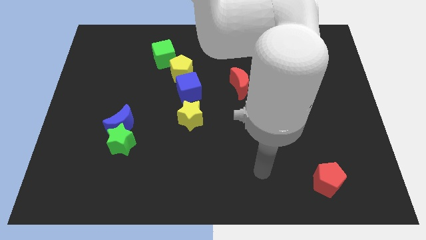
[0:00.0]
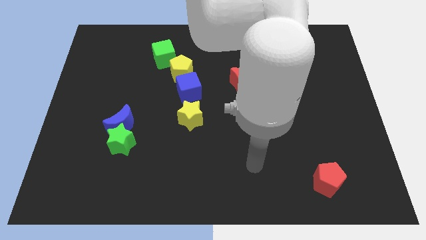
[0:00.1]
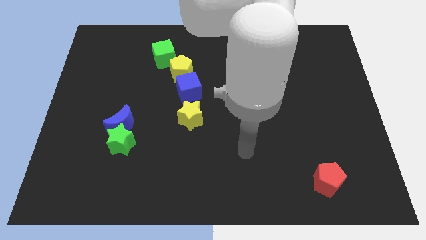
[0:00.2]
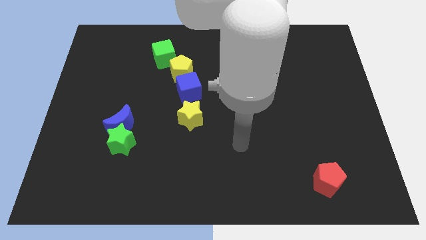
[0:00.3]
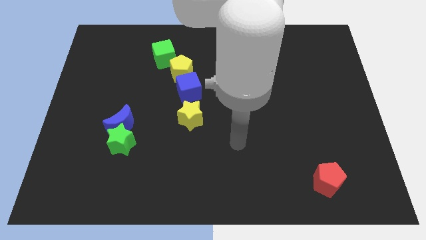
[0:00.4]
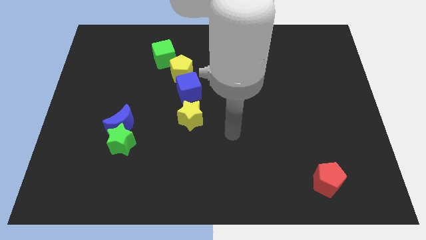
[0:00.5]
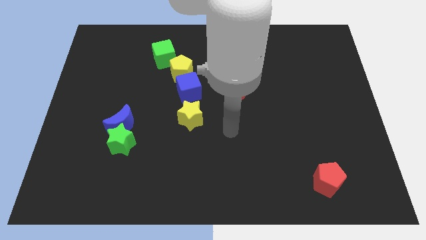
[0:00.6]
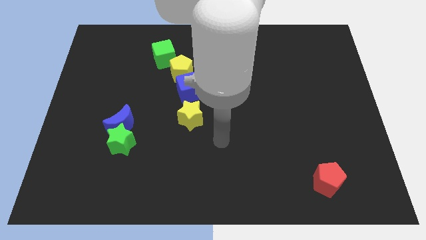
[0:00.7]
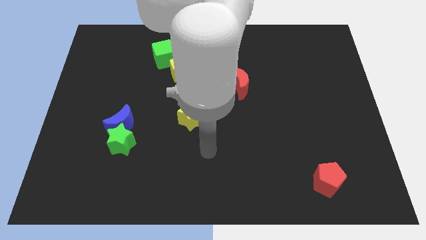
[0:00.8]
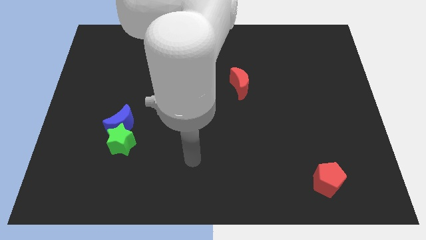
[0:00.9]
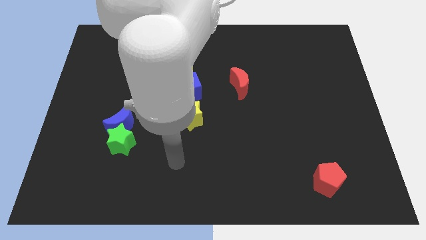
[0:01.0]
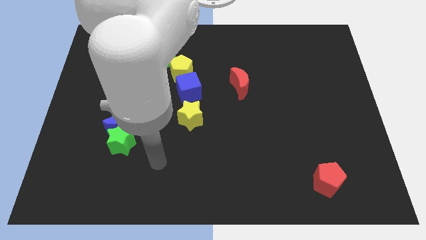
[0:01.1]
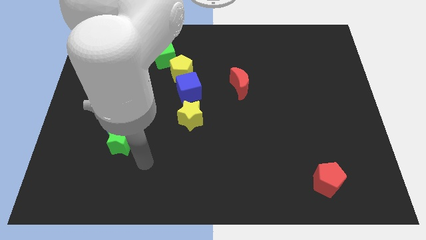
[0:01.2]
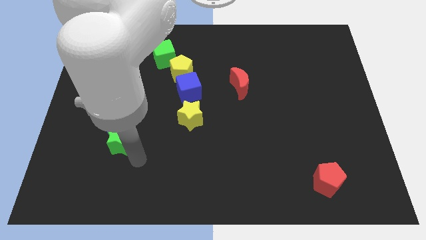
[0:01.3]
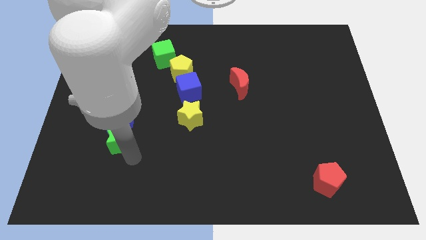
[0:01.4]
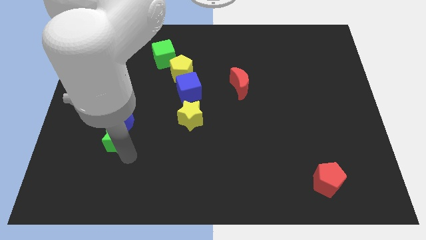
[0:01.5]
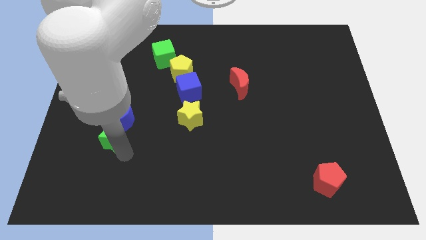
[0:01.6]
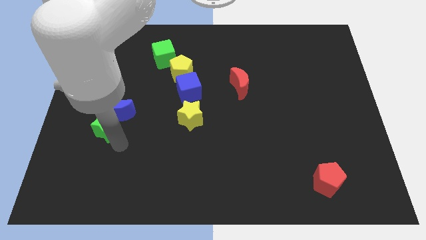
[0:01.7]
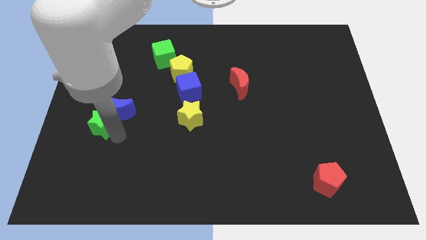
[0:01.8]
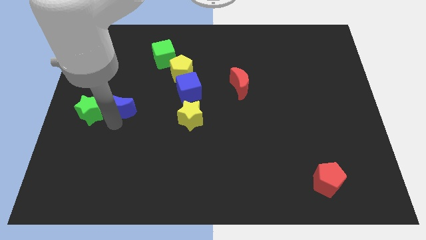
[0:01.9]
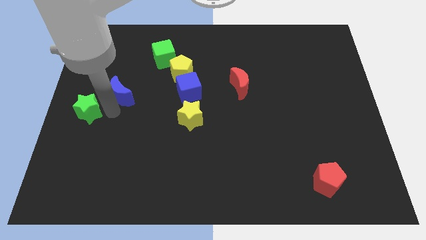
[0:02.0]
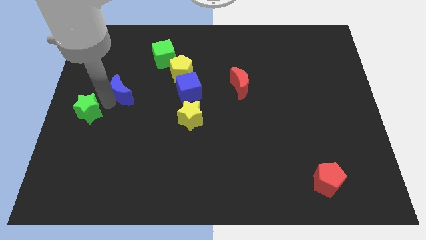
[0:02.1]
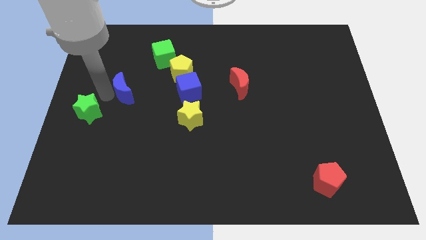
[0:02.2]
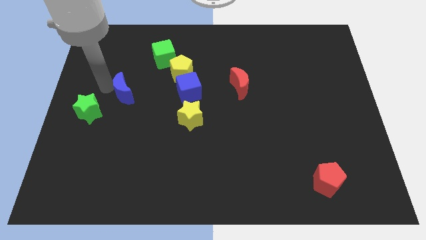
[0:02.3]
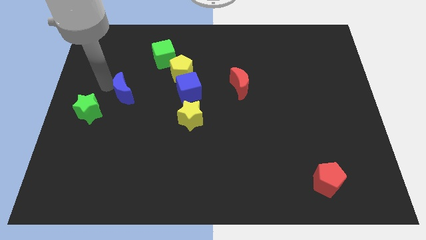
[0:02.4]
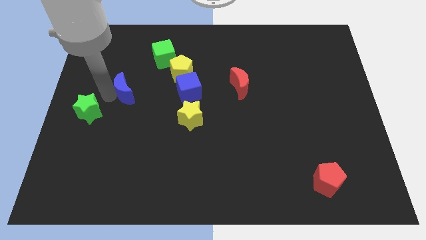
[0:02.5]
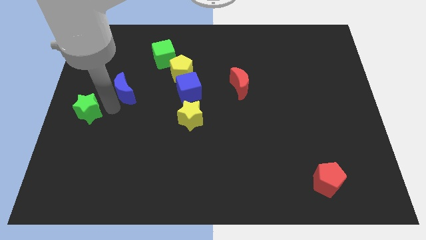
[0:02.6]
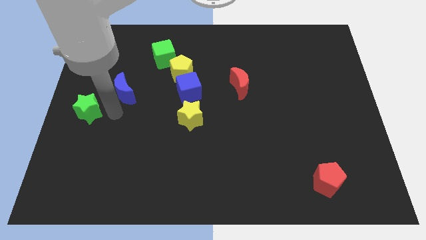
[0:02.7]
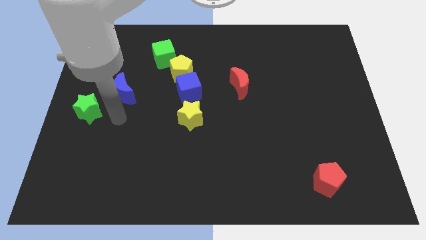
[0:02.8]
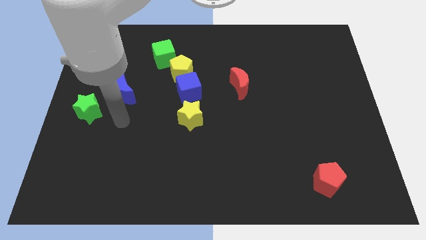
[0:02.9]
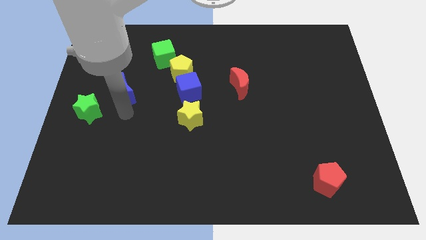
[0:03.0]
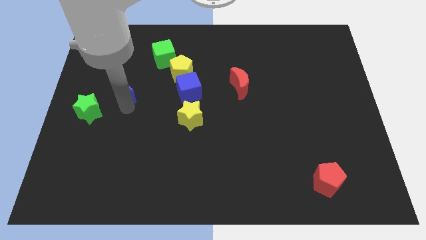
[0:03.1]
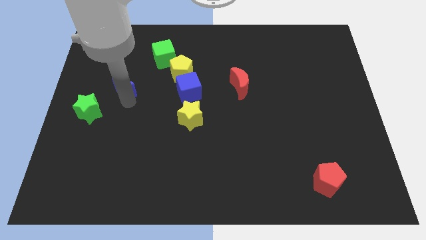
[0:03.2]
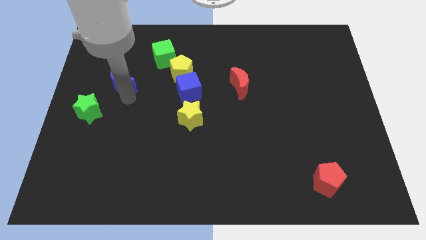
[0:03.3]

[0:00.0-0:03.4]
separate blue moon from green star

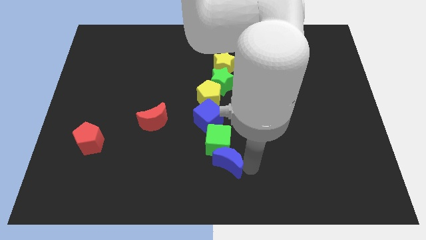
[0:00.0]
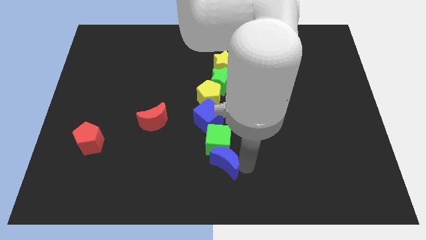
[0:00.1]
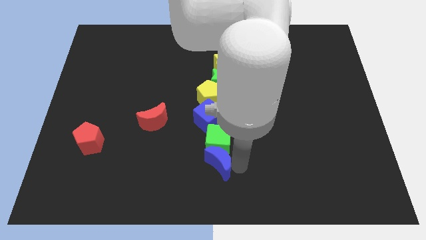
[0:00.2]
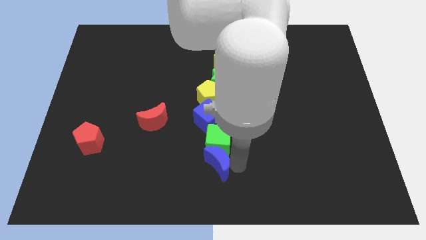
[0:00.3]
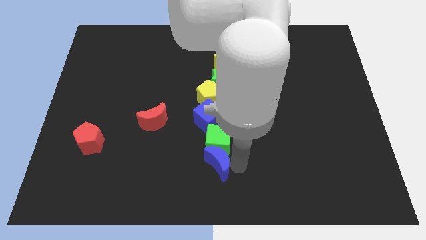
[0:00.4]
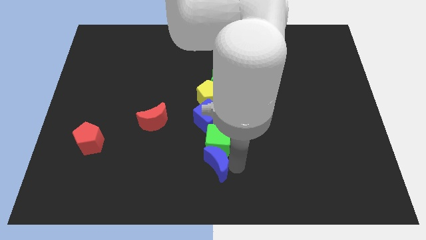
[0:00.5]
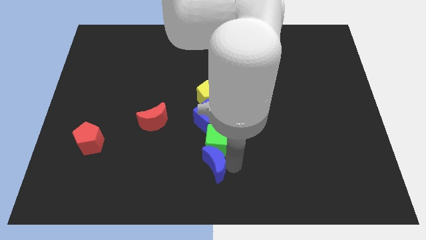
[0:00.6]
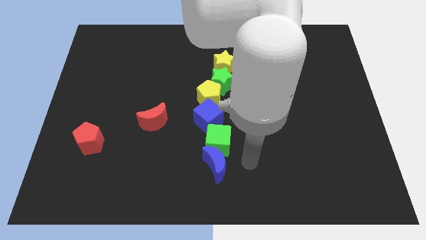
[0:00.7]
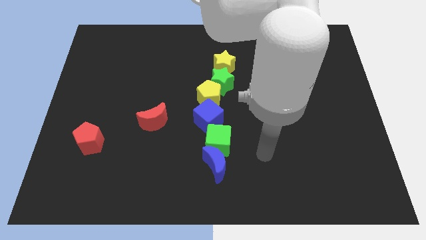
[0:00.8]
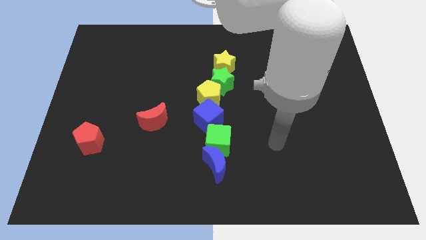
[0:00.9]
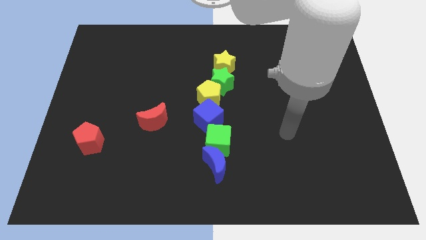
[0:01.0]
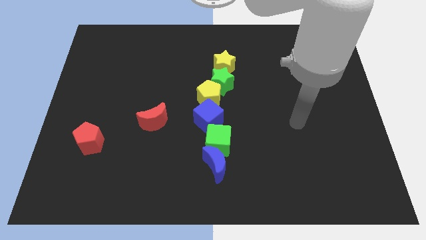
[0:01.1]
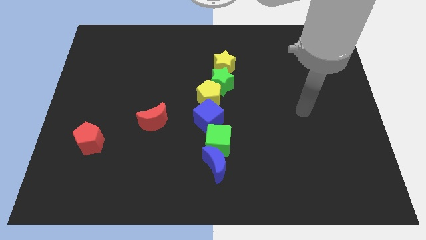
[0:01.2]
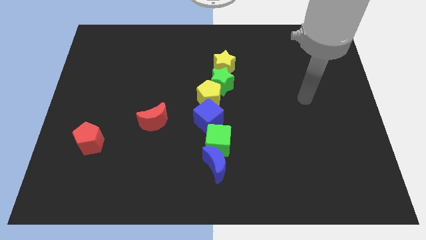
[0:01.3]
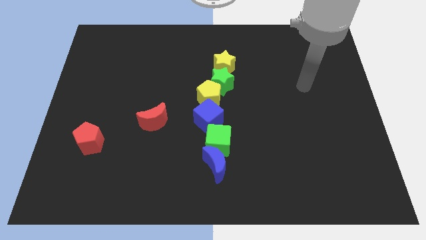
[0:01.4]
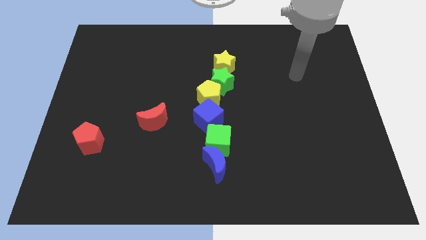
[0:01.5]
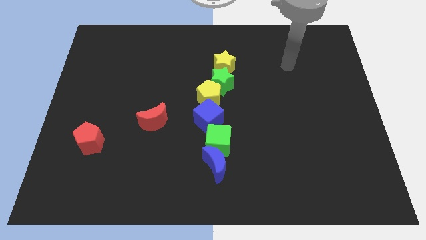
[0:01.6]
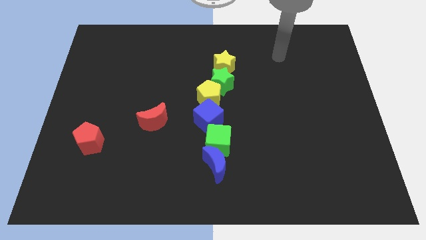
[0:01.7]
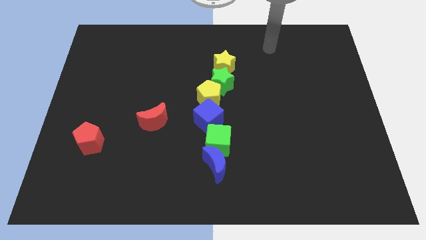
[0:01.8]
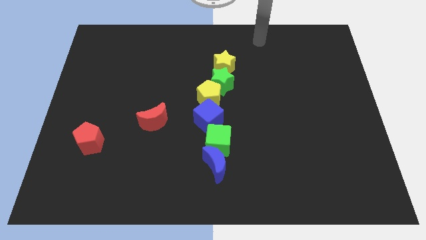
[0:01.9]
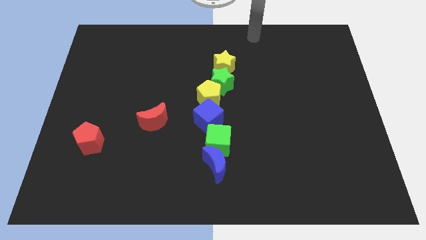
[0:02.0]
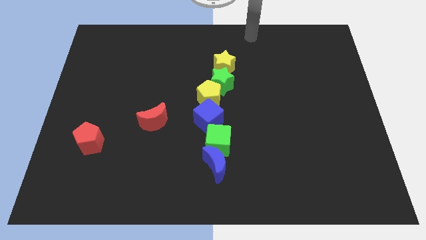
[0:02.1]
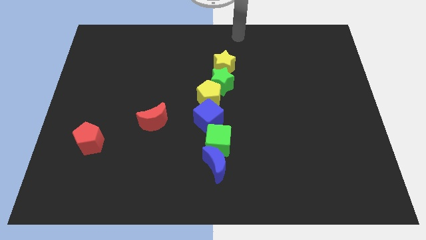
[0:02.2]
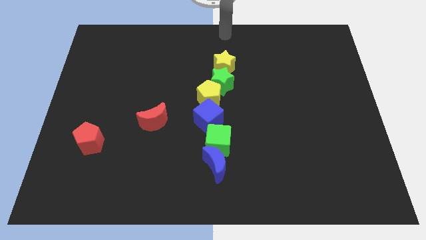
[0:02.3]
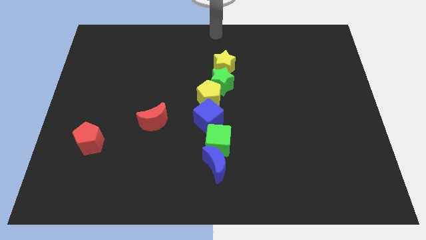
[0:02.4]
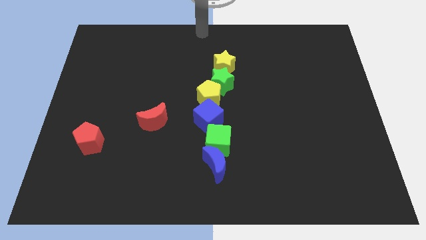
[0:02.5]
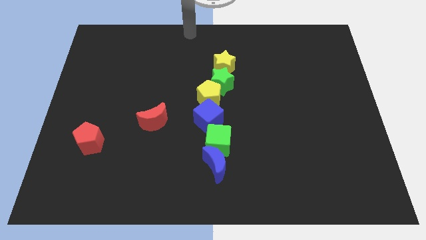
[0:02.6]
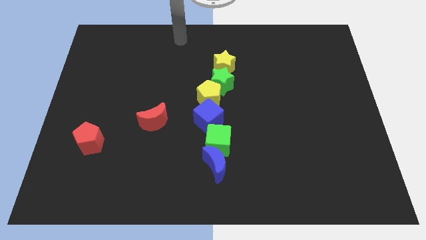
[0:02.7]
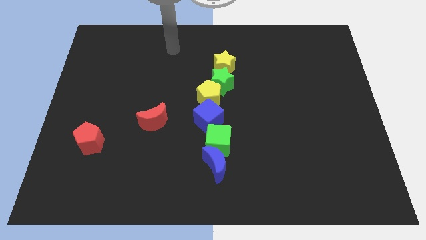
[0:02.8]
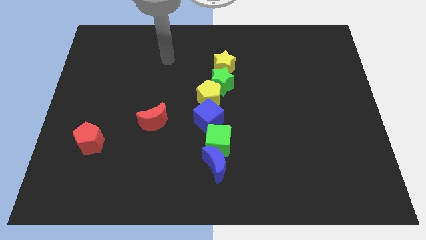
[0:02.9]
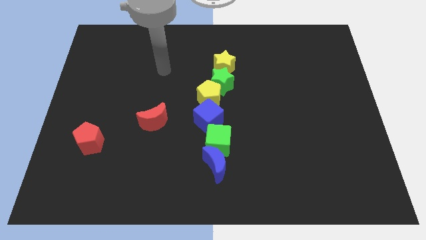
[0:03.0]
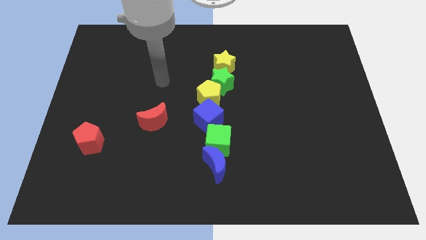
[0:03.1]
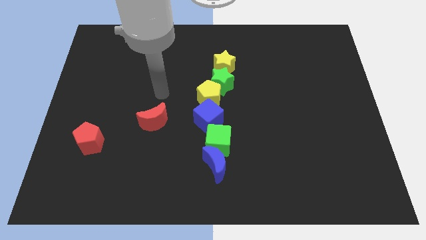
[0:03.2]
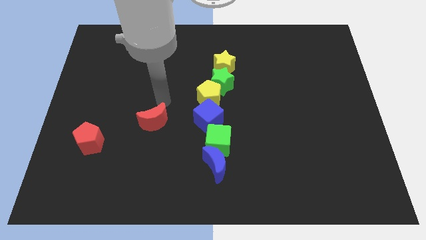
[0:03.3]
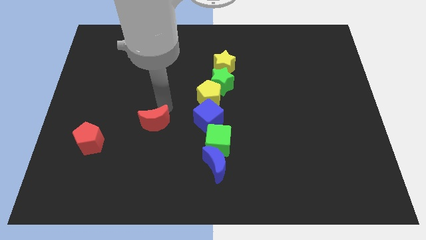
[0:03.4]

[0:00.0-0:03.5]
push the blue crescent slightly to the left

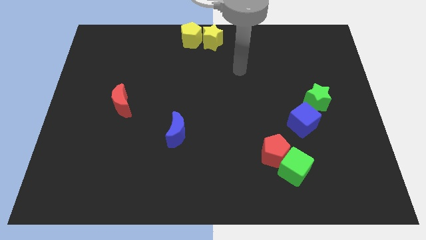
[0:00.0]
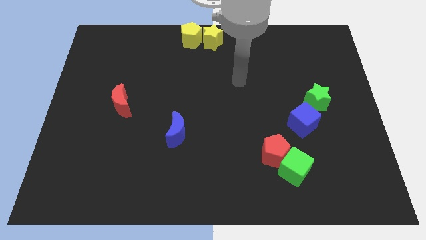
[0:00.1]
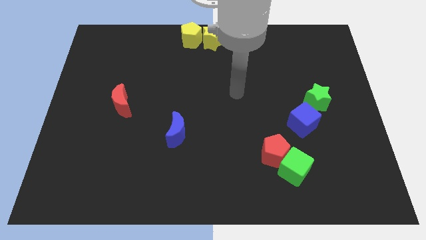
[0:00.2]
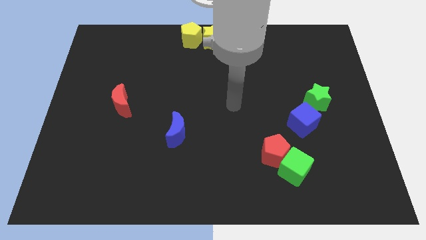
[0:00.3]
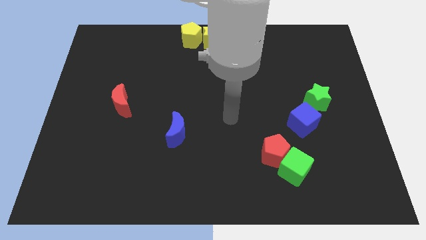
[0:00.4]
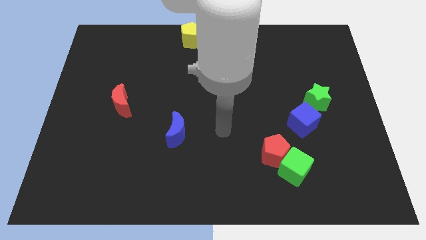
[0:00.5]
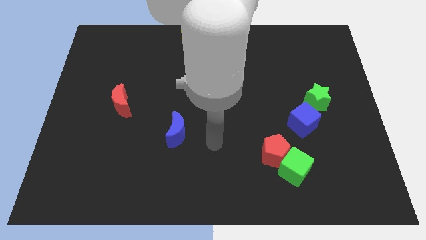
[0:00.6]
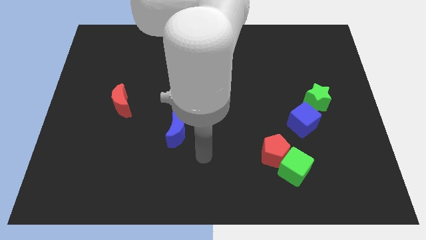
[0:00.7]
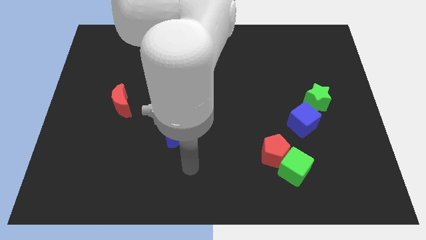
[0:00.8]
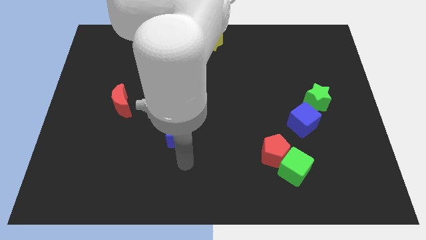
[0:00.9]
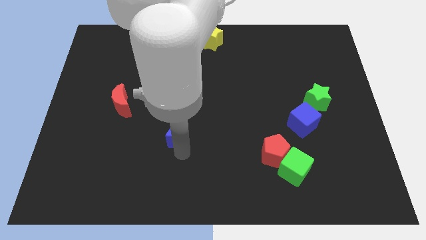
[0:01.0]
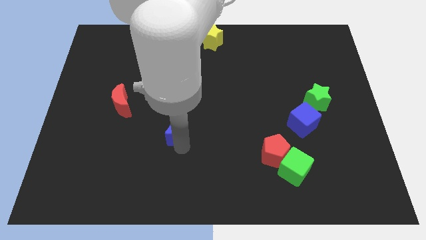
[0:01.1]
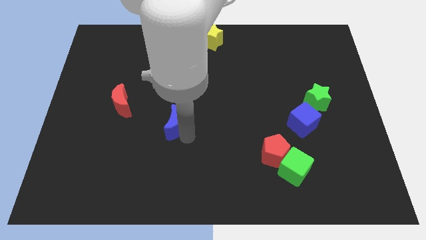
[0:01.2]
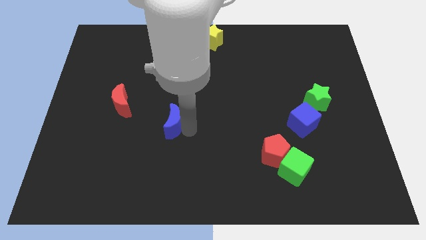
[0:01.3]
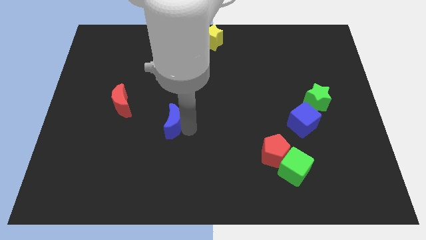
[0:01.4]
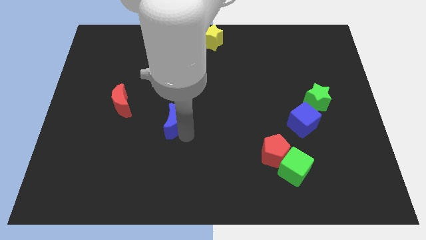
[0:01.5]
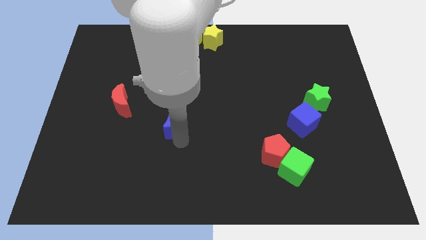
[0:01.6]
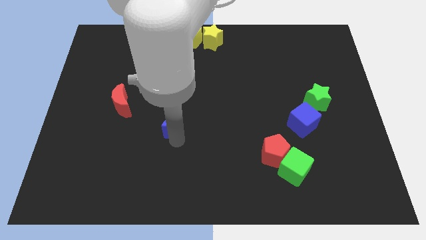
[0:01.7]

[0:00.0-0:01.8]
go near blue moon

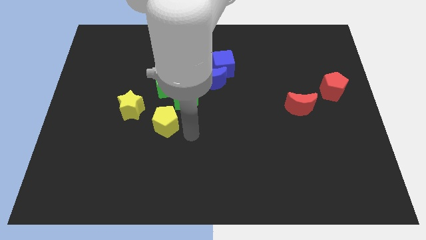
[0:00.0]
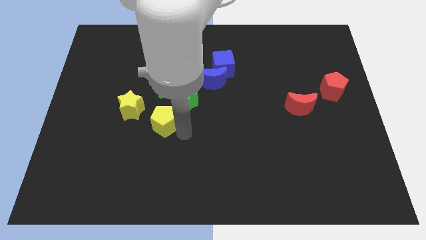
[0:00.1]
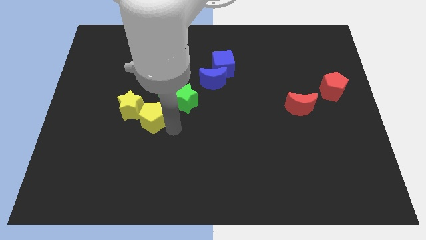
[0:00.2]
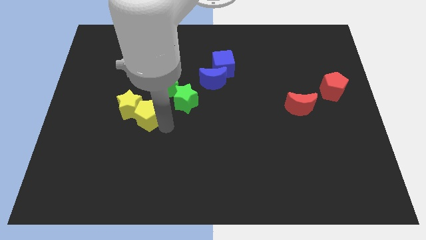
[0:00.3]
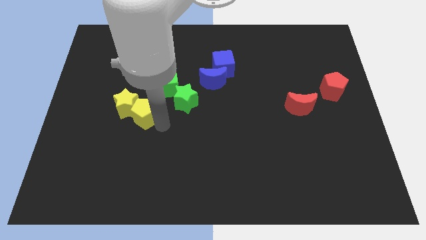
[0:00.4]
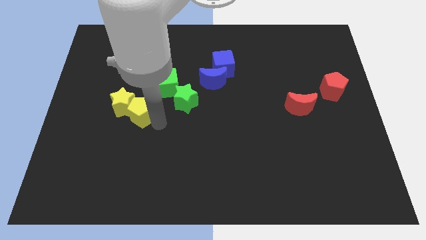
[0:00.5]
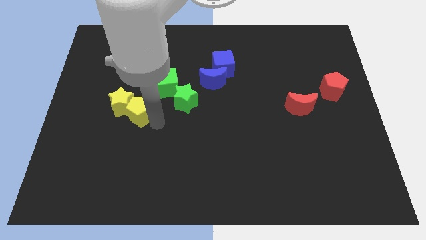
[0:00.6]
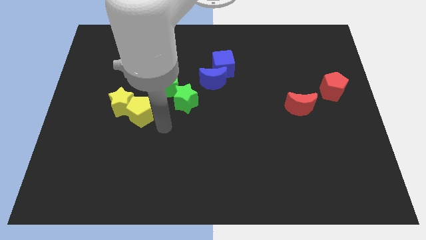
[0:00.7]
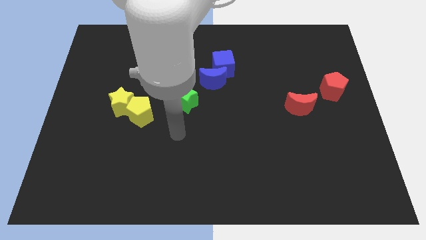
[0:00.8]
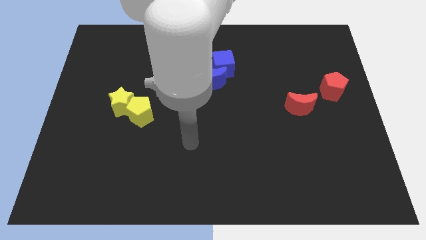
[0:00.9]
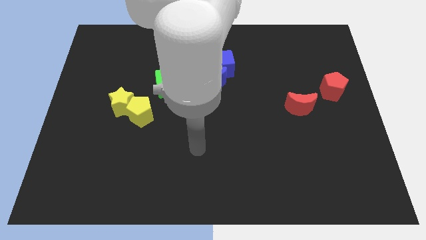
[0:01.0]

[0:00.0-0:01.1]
push the yellow pentagon into yellow star
